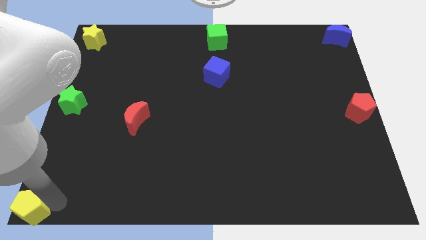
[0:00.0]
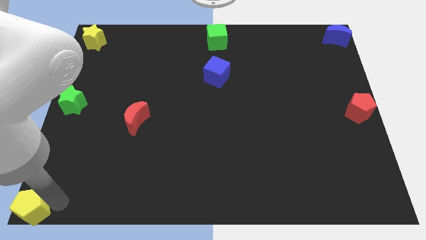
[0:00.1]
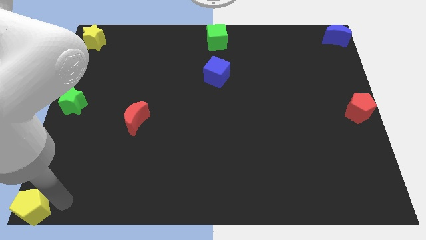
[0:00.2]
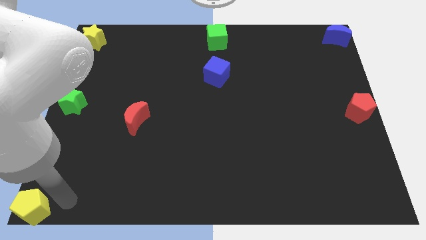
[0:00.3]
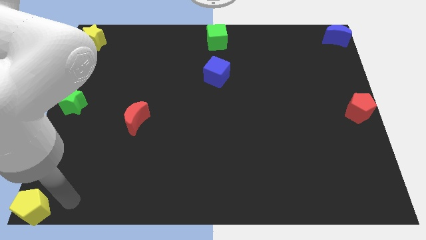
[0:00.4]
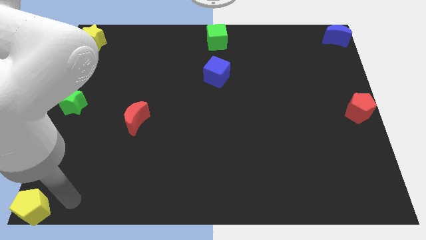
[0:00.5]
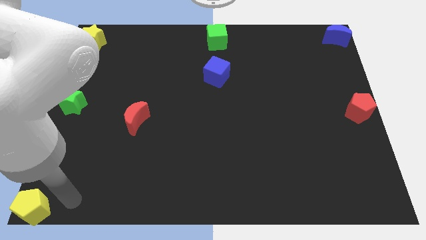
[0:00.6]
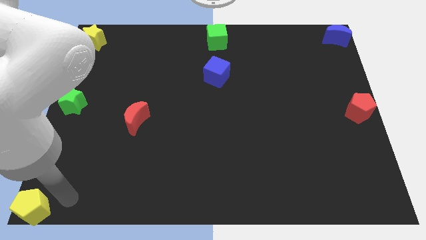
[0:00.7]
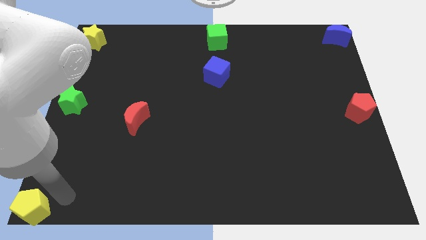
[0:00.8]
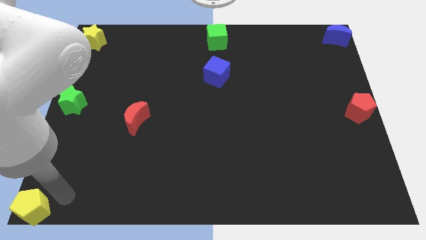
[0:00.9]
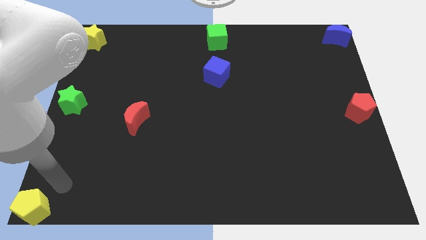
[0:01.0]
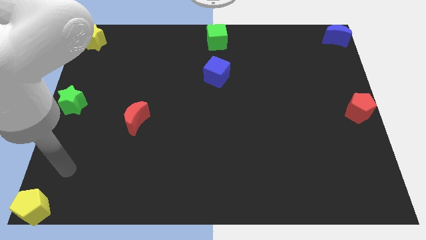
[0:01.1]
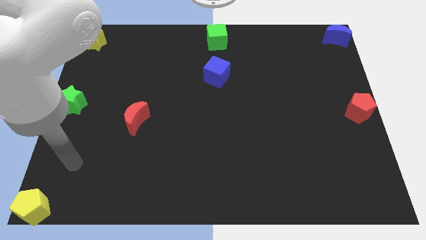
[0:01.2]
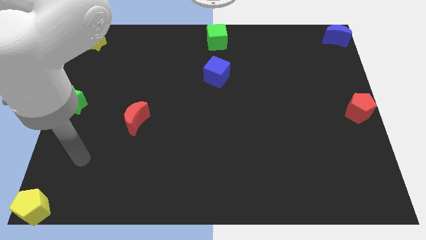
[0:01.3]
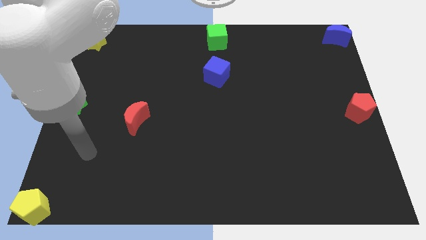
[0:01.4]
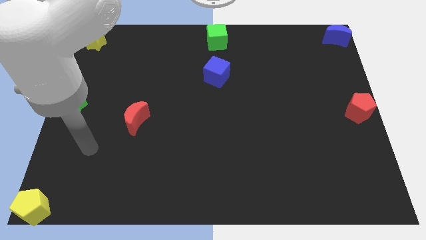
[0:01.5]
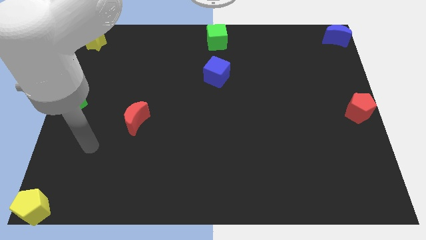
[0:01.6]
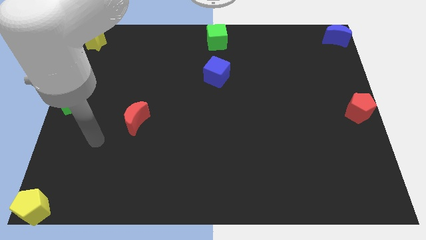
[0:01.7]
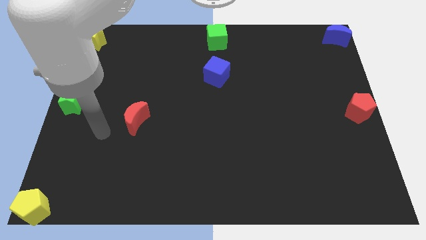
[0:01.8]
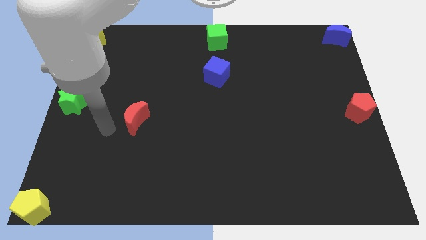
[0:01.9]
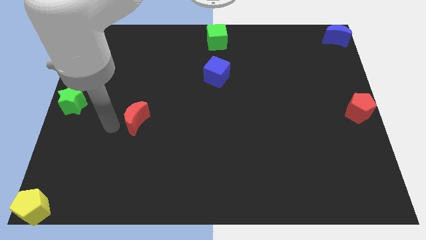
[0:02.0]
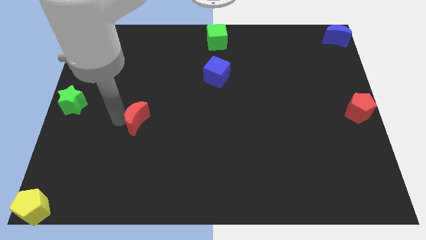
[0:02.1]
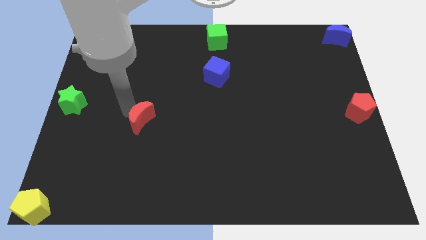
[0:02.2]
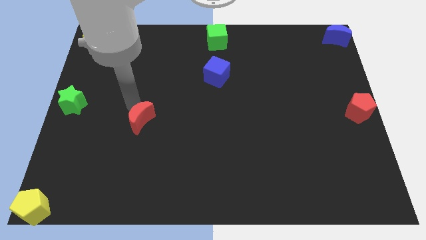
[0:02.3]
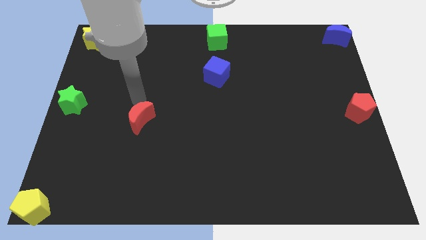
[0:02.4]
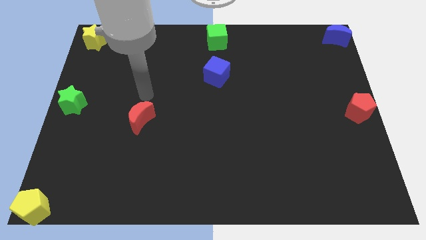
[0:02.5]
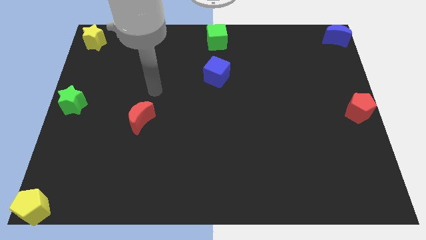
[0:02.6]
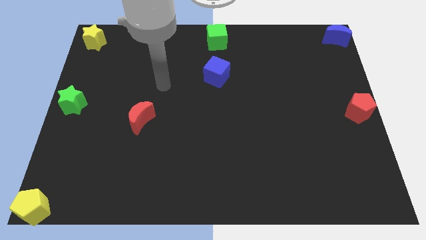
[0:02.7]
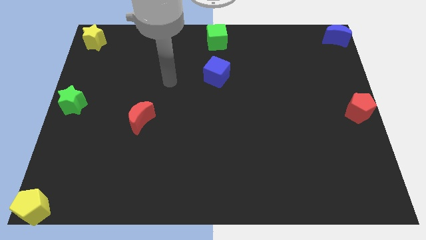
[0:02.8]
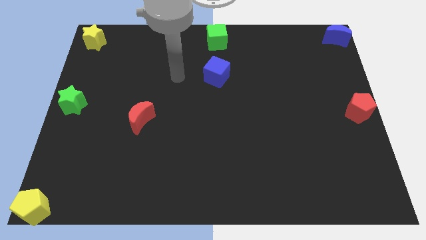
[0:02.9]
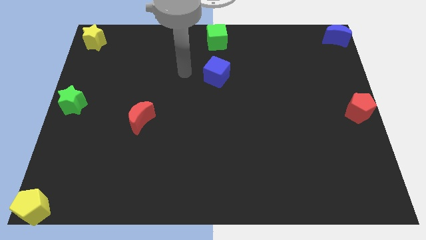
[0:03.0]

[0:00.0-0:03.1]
slightly touch the left side of the red moon

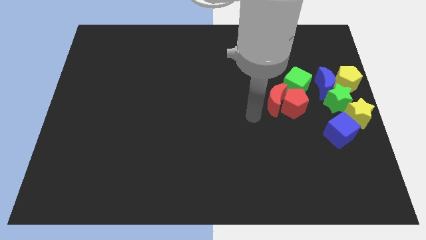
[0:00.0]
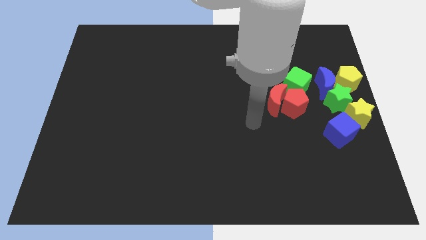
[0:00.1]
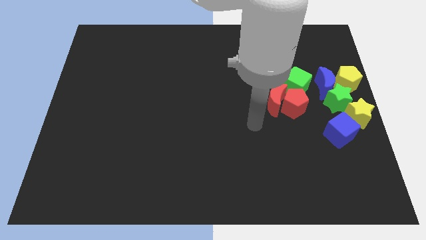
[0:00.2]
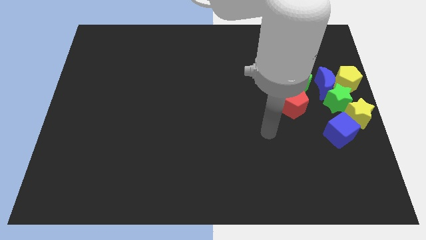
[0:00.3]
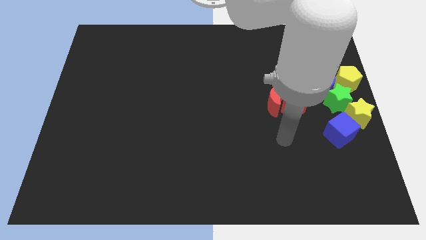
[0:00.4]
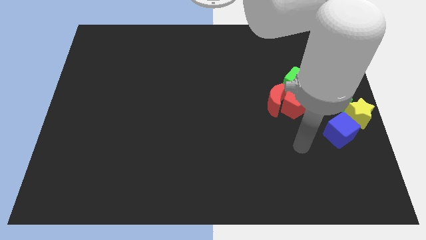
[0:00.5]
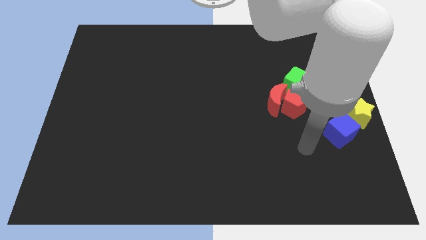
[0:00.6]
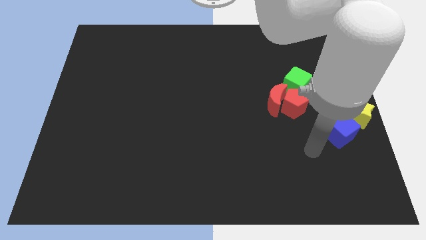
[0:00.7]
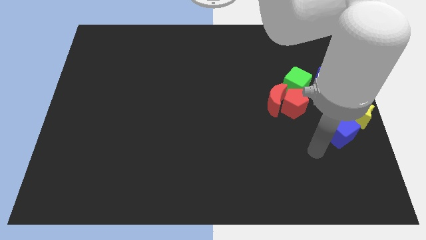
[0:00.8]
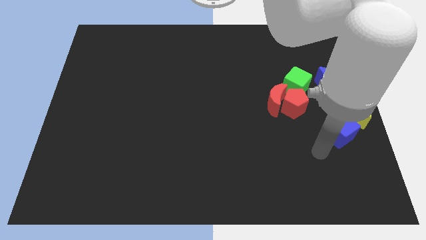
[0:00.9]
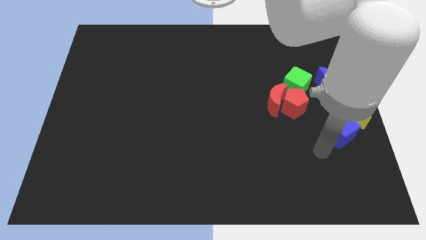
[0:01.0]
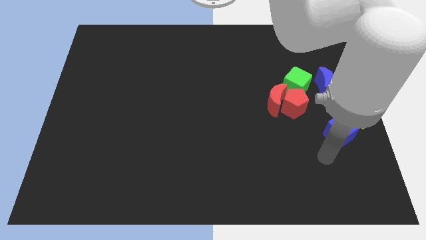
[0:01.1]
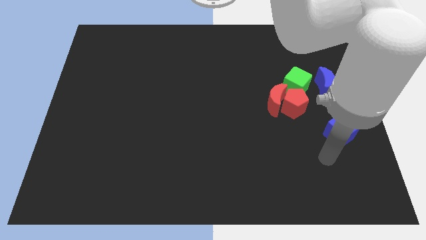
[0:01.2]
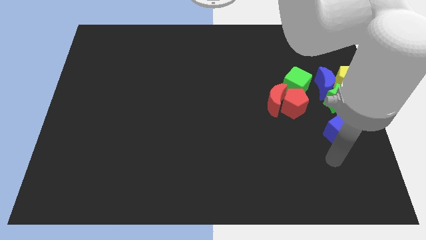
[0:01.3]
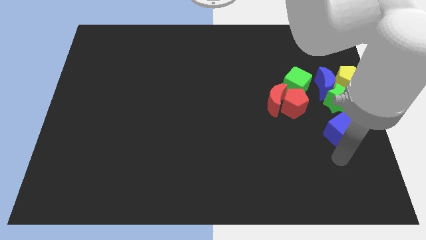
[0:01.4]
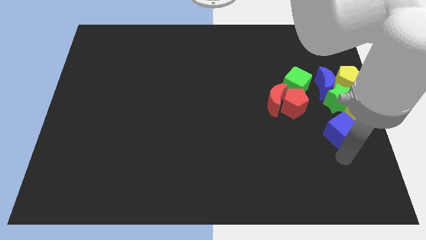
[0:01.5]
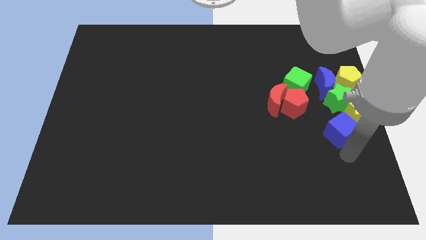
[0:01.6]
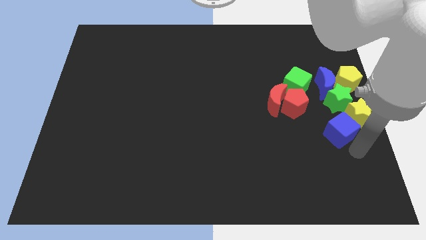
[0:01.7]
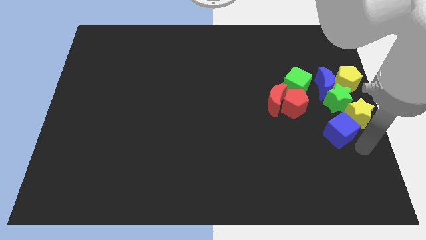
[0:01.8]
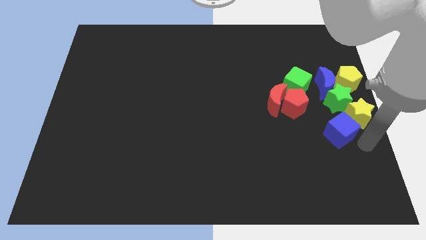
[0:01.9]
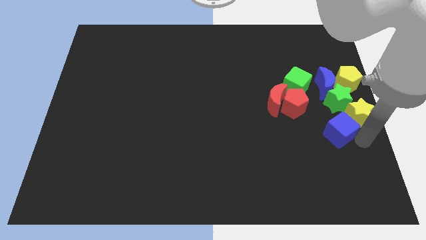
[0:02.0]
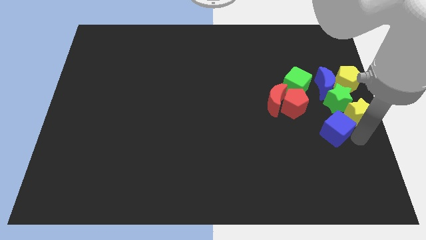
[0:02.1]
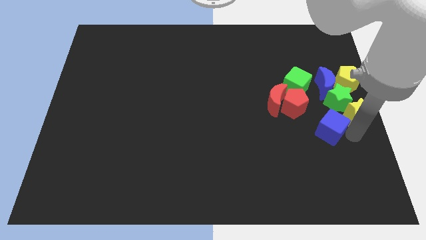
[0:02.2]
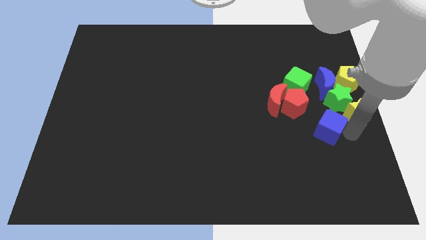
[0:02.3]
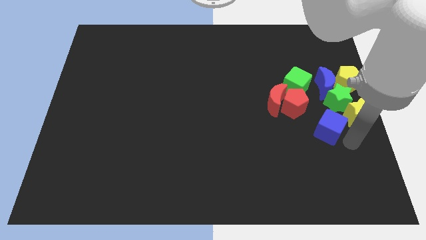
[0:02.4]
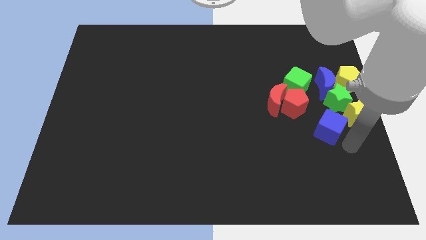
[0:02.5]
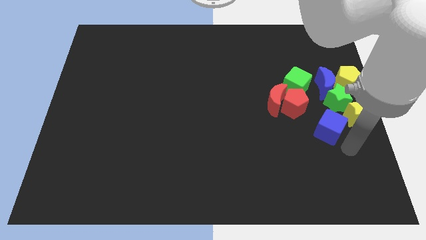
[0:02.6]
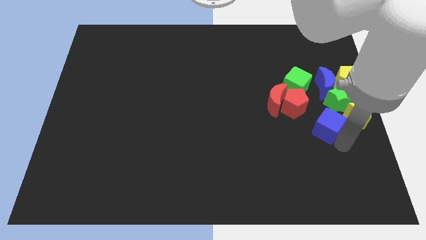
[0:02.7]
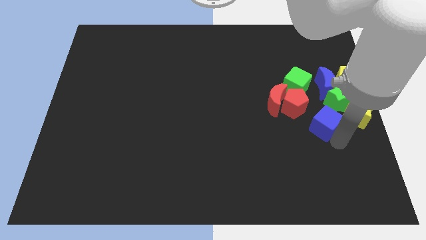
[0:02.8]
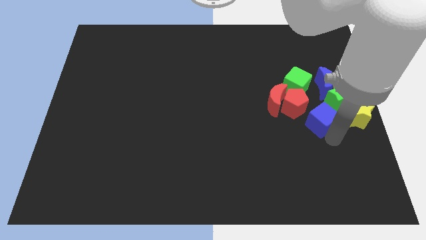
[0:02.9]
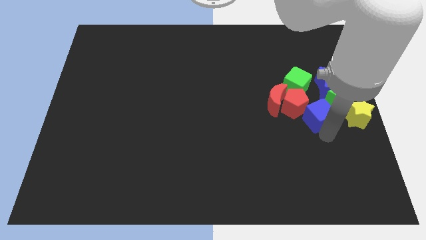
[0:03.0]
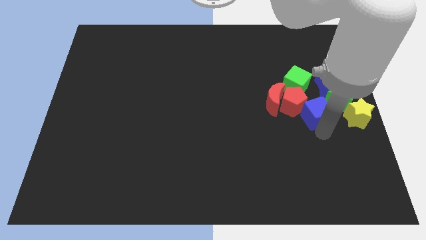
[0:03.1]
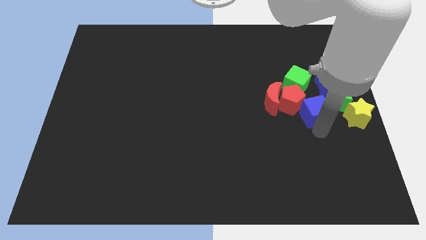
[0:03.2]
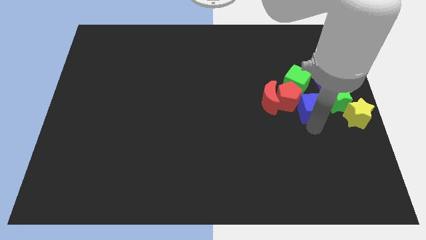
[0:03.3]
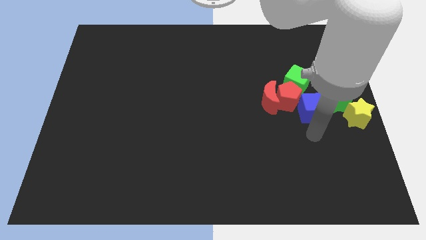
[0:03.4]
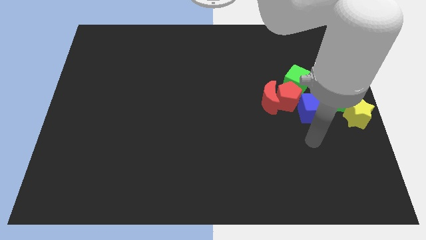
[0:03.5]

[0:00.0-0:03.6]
move the blue cube to the group of blocks

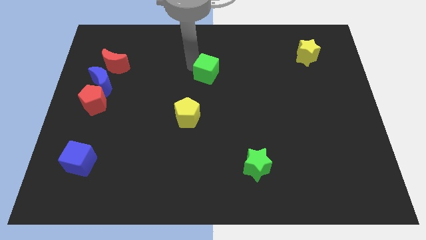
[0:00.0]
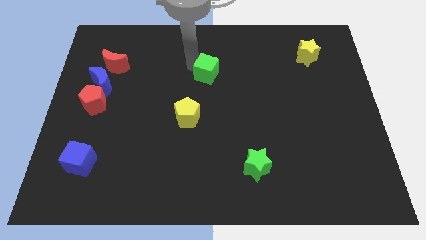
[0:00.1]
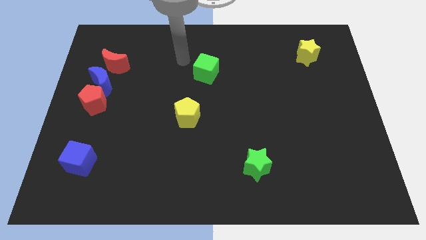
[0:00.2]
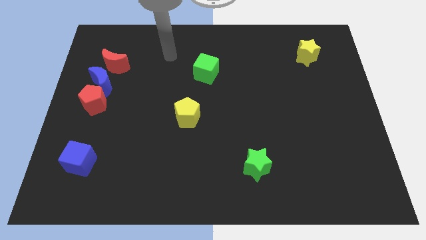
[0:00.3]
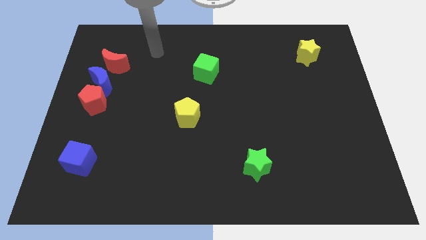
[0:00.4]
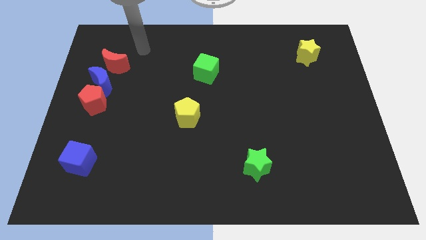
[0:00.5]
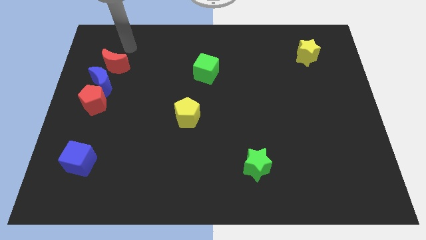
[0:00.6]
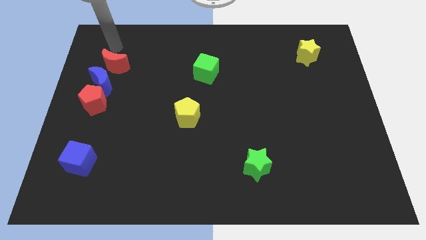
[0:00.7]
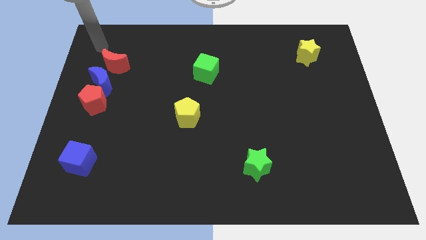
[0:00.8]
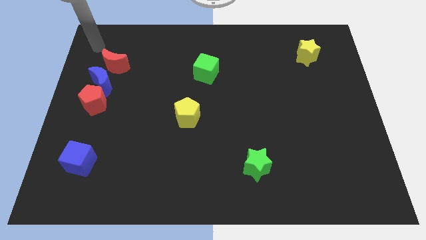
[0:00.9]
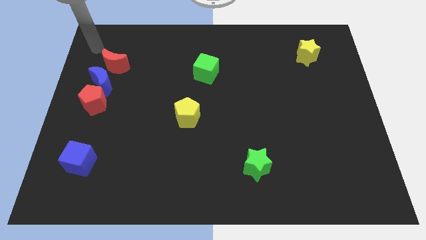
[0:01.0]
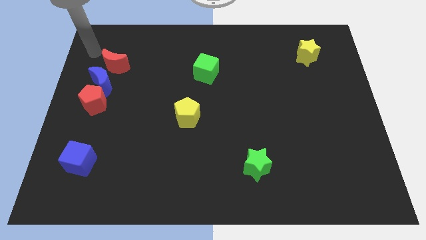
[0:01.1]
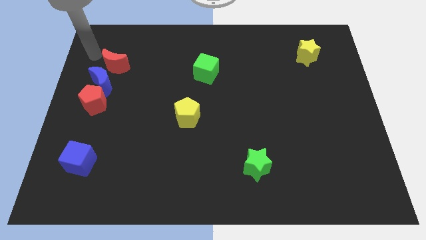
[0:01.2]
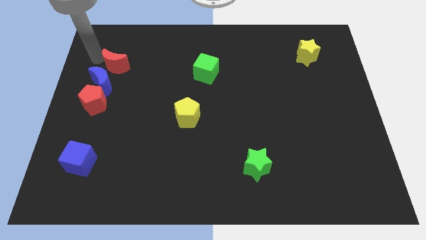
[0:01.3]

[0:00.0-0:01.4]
move the arm away from the green cube

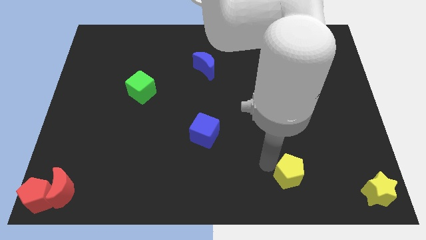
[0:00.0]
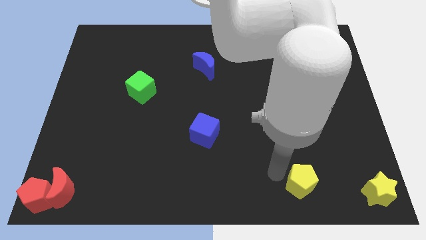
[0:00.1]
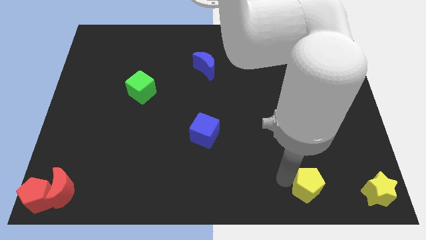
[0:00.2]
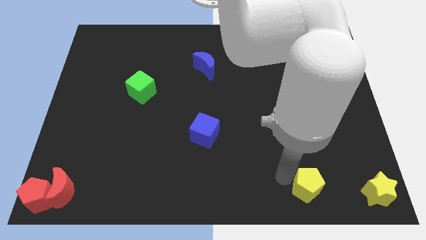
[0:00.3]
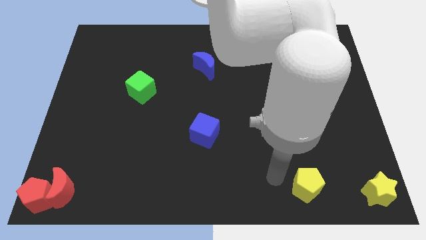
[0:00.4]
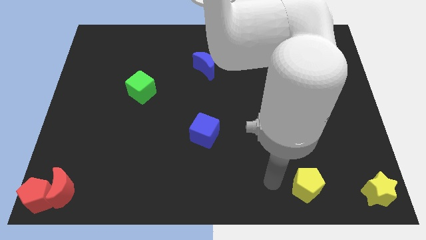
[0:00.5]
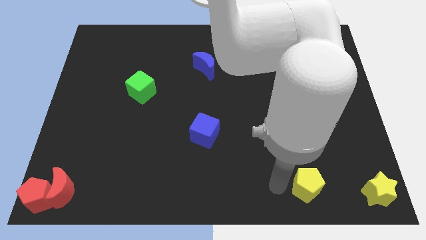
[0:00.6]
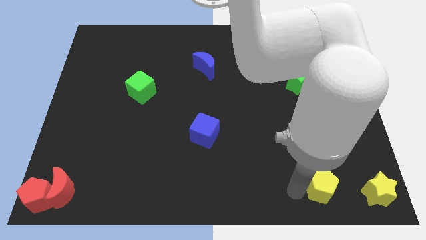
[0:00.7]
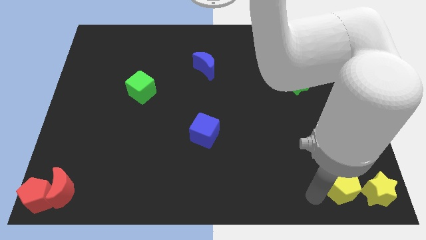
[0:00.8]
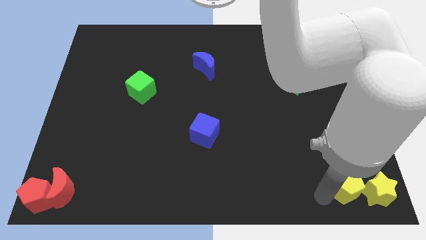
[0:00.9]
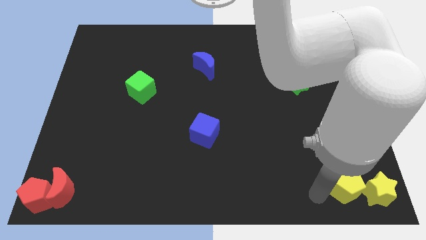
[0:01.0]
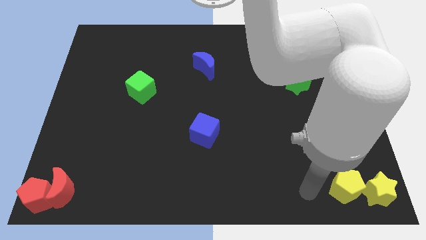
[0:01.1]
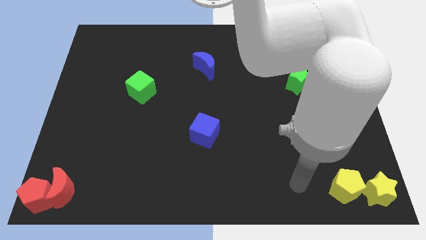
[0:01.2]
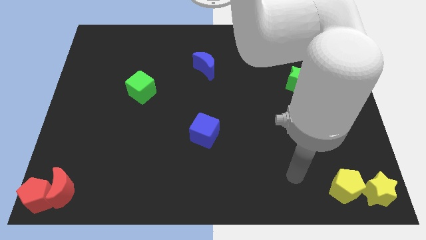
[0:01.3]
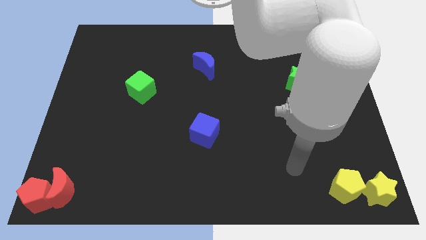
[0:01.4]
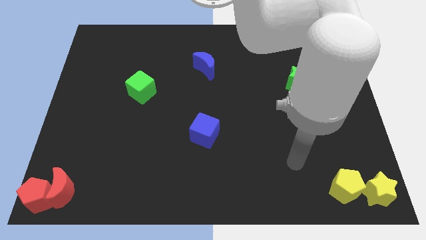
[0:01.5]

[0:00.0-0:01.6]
place the yellow pentagon to the left of the yellow star
